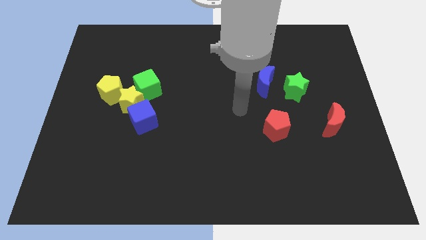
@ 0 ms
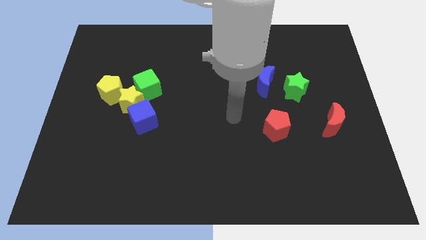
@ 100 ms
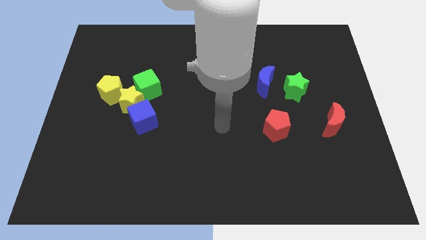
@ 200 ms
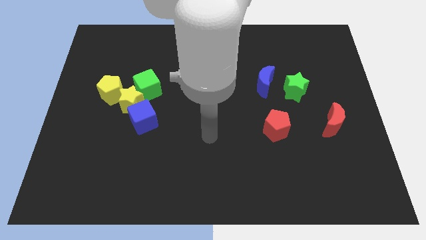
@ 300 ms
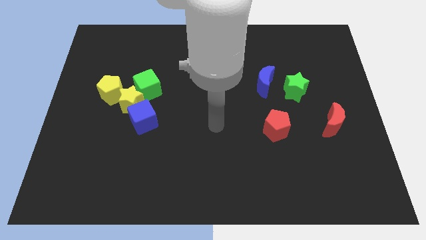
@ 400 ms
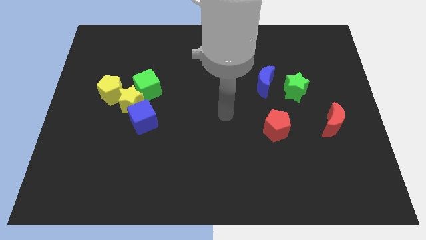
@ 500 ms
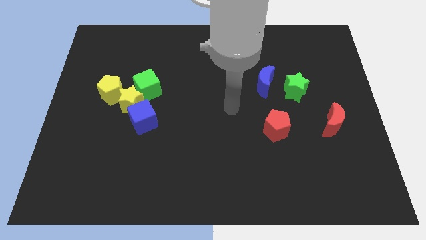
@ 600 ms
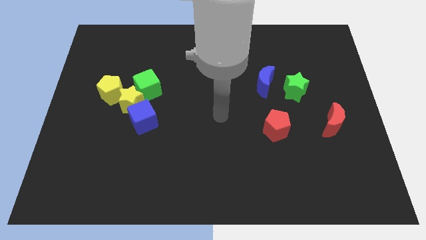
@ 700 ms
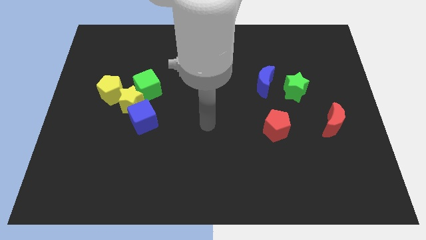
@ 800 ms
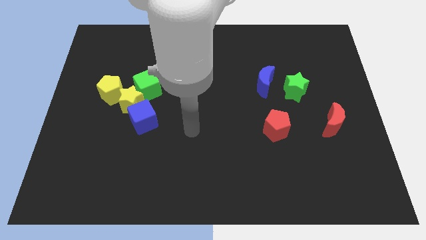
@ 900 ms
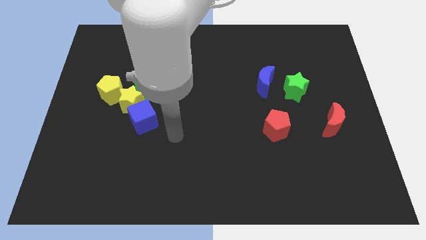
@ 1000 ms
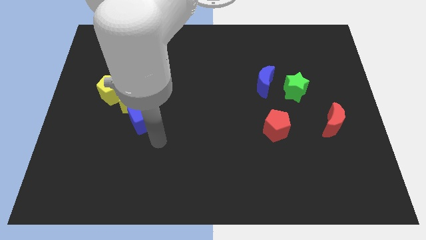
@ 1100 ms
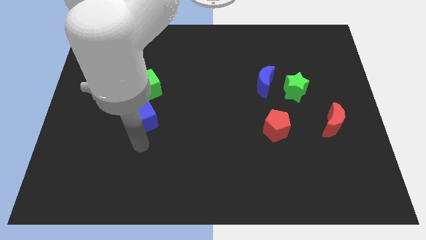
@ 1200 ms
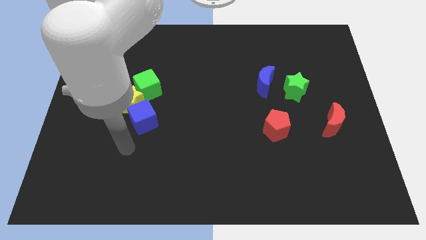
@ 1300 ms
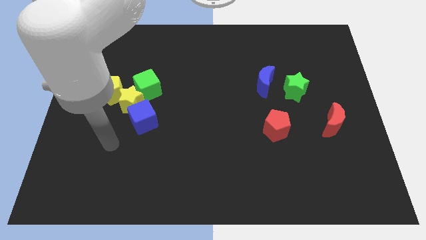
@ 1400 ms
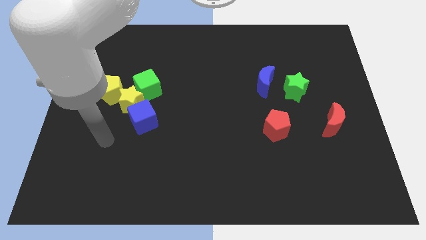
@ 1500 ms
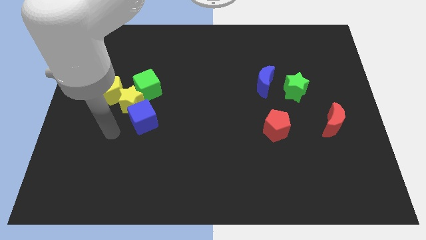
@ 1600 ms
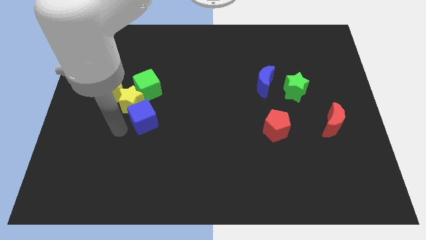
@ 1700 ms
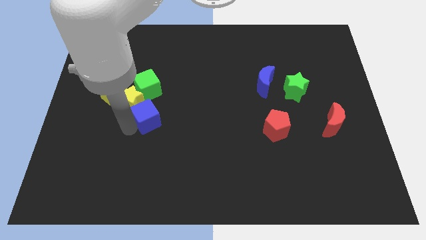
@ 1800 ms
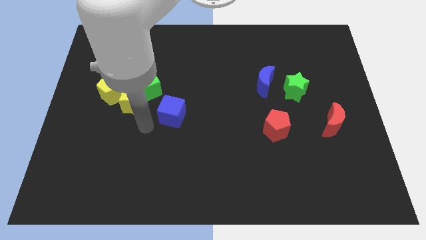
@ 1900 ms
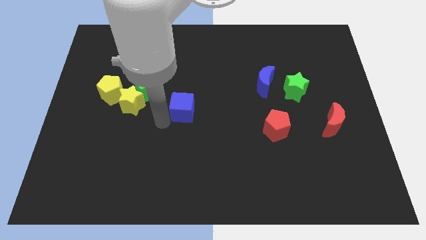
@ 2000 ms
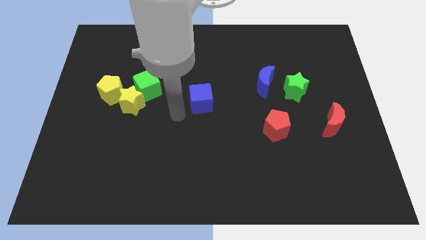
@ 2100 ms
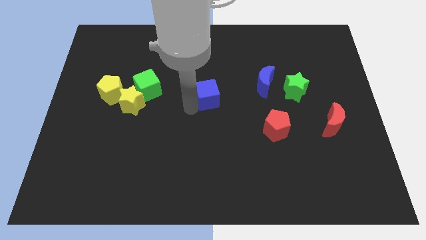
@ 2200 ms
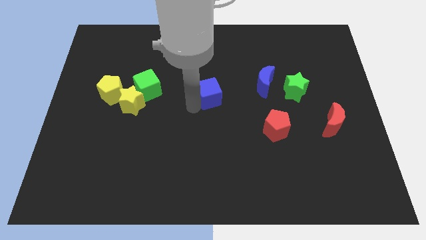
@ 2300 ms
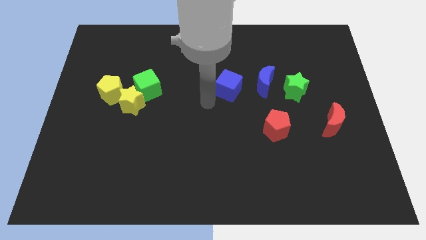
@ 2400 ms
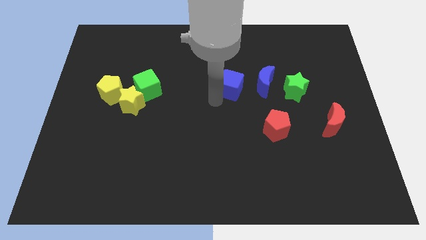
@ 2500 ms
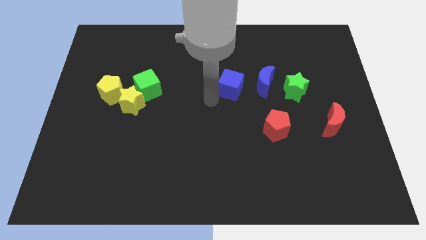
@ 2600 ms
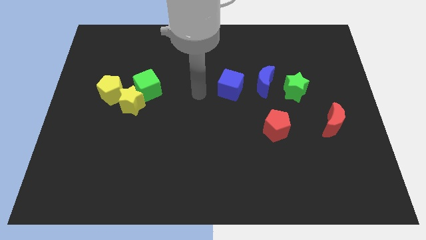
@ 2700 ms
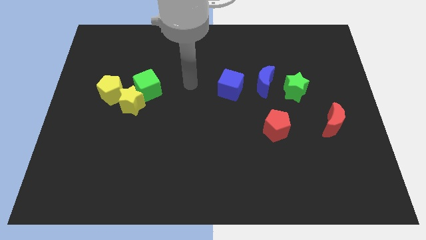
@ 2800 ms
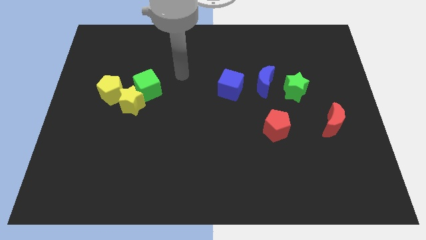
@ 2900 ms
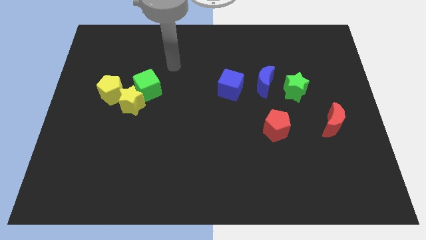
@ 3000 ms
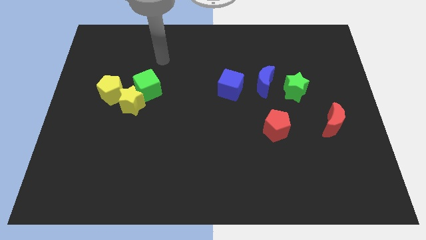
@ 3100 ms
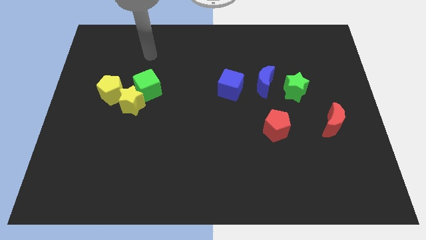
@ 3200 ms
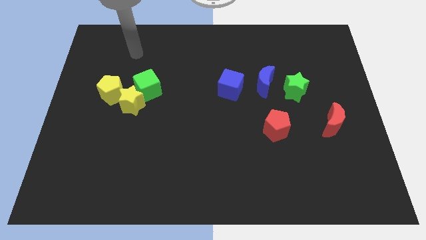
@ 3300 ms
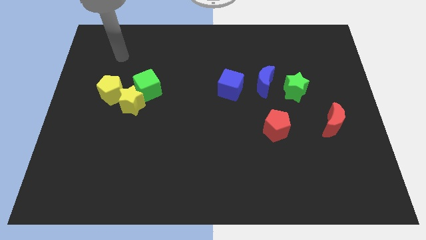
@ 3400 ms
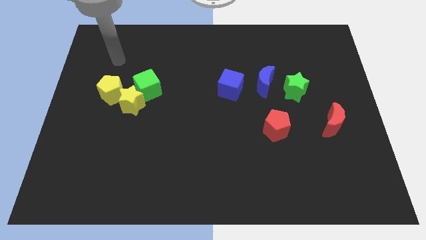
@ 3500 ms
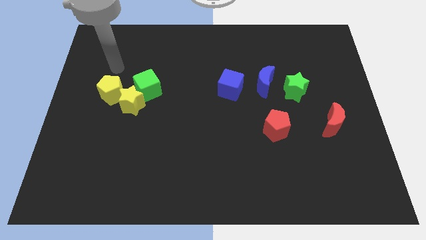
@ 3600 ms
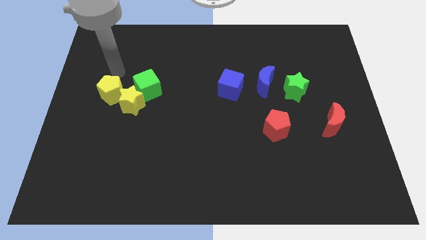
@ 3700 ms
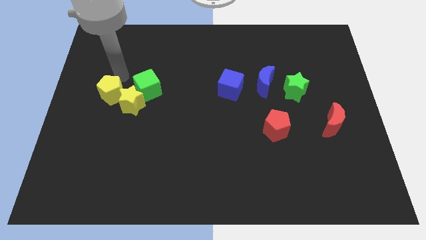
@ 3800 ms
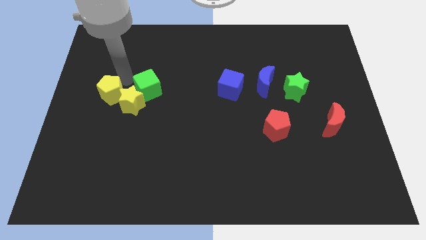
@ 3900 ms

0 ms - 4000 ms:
place the arm in between the green cube and yellow pentagon

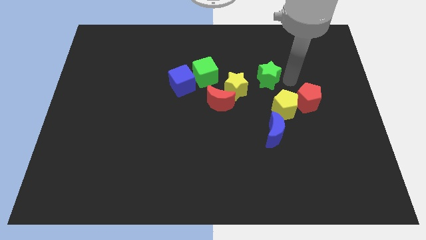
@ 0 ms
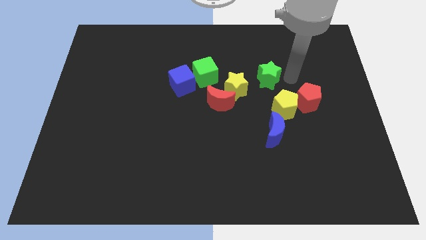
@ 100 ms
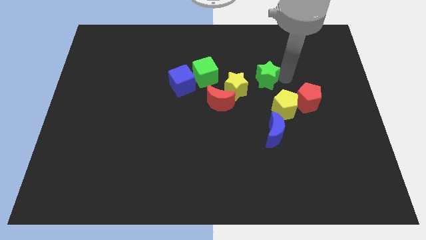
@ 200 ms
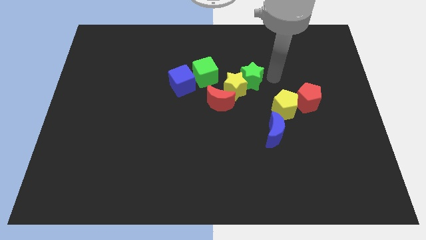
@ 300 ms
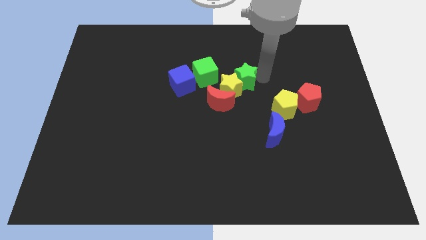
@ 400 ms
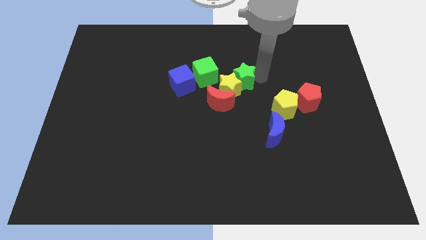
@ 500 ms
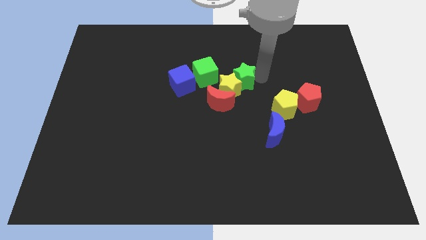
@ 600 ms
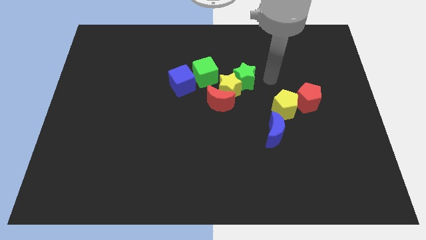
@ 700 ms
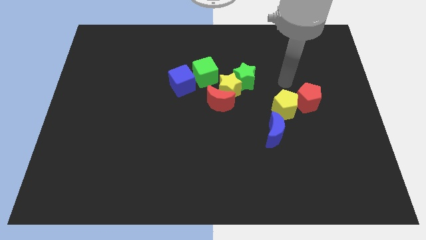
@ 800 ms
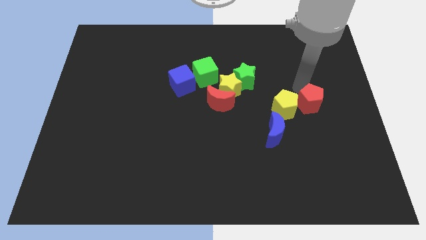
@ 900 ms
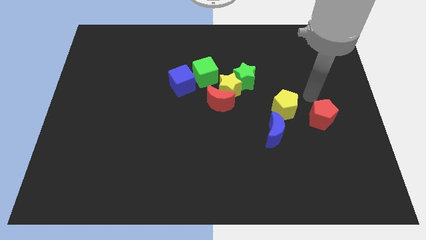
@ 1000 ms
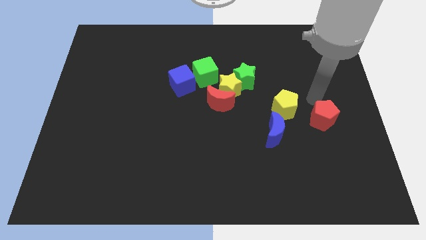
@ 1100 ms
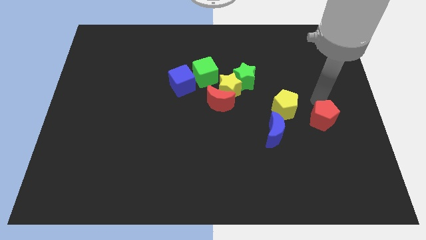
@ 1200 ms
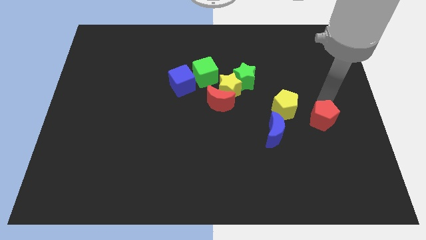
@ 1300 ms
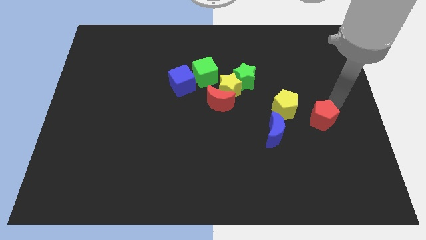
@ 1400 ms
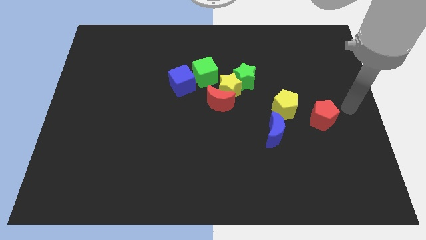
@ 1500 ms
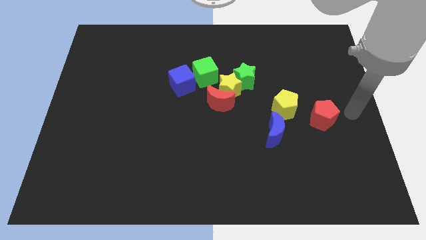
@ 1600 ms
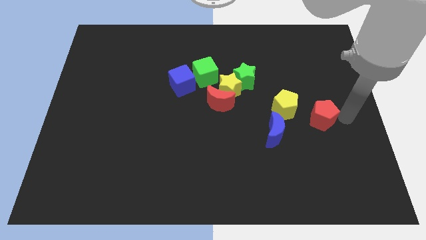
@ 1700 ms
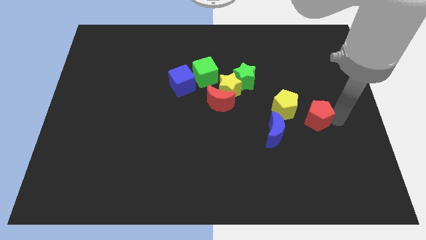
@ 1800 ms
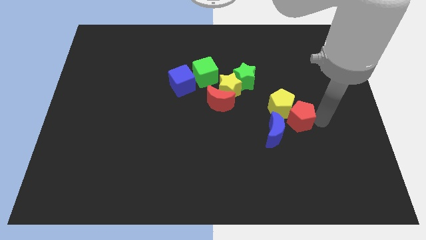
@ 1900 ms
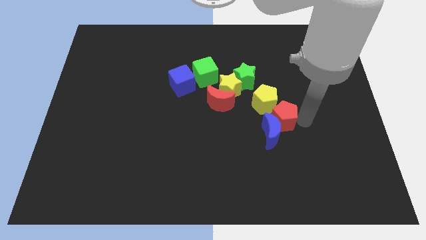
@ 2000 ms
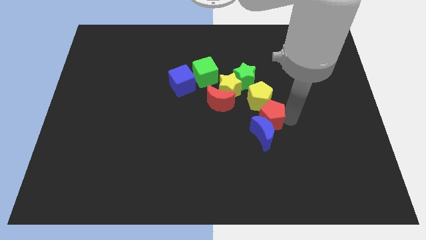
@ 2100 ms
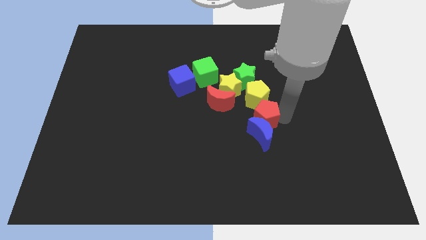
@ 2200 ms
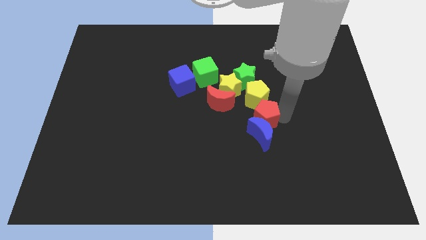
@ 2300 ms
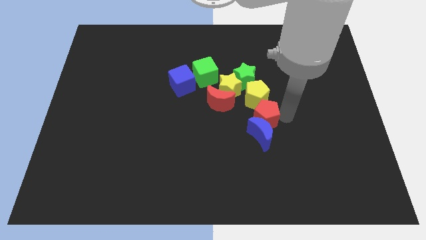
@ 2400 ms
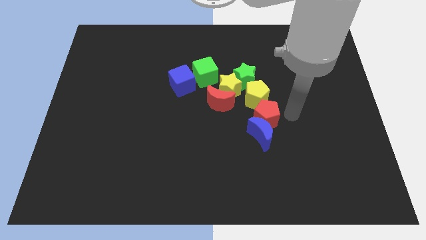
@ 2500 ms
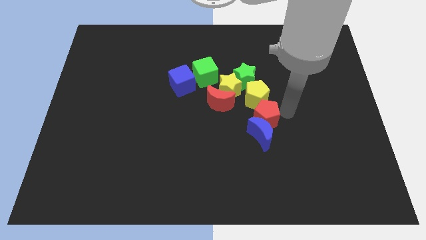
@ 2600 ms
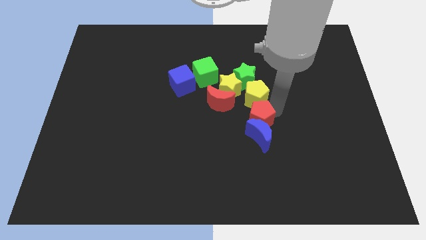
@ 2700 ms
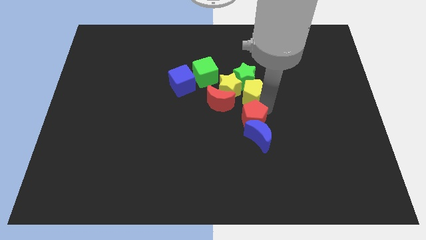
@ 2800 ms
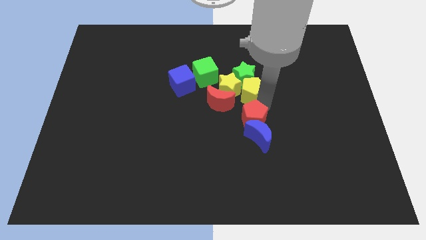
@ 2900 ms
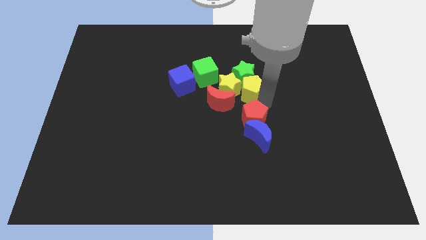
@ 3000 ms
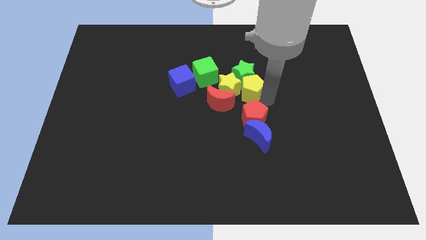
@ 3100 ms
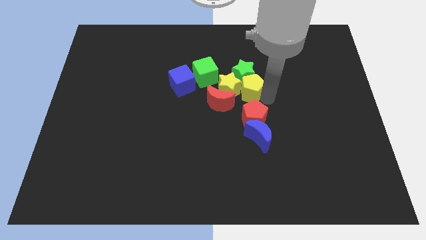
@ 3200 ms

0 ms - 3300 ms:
push the green star with the yellow pentagon towards the top center of the board

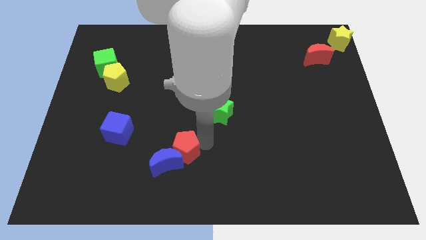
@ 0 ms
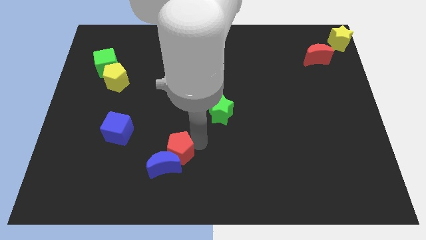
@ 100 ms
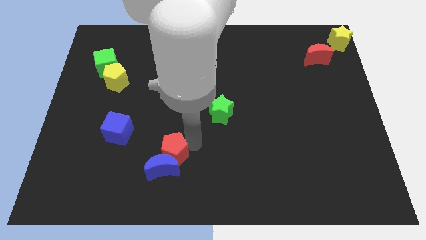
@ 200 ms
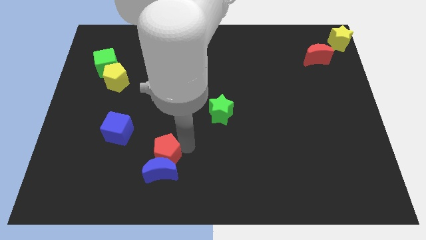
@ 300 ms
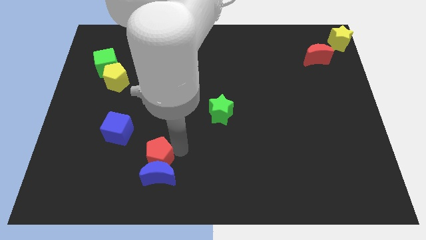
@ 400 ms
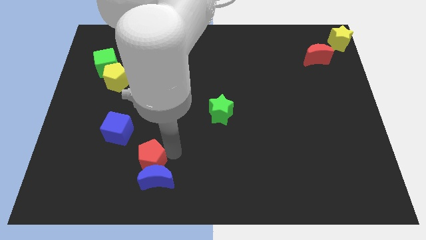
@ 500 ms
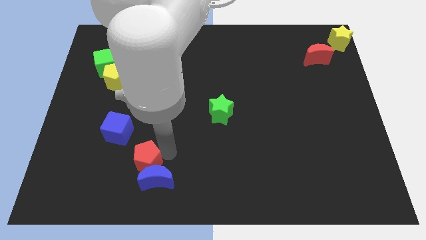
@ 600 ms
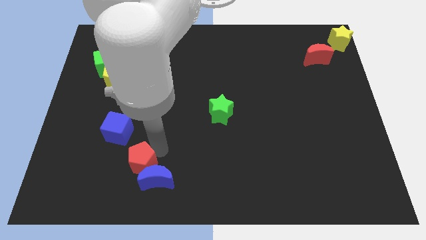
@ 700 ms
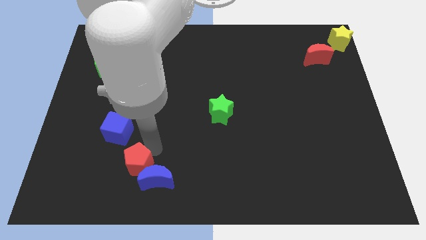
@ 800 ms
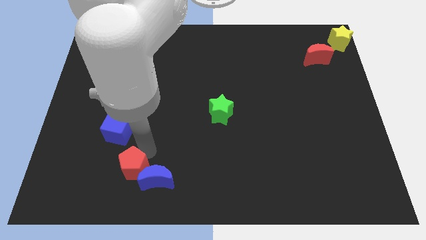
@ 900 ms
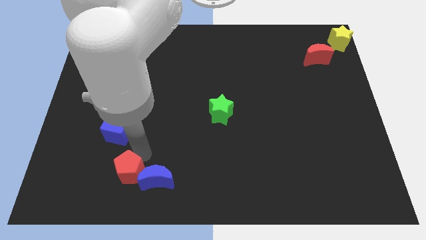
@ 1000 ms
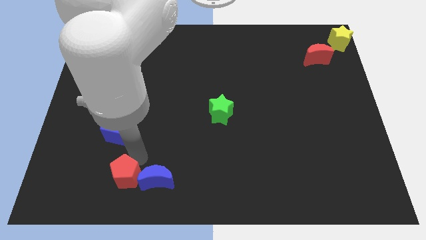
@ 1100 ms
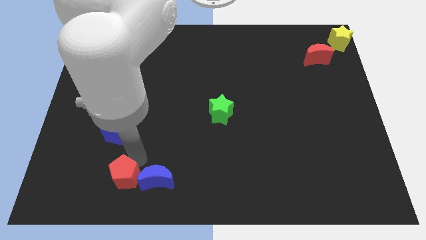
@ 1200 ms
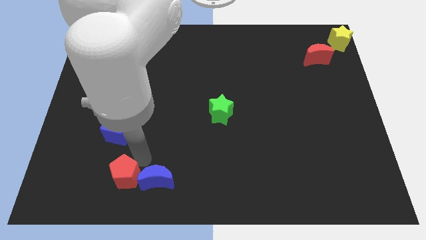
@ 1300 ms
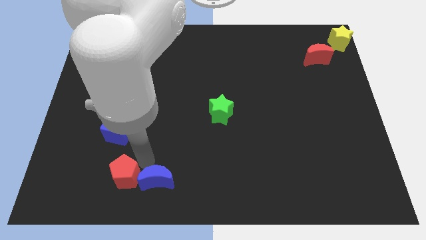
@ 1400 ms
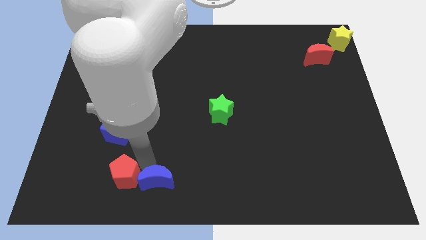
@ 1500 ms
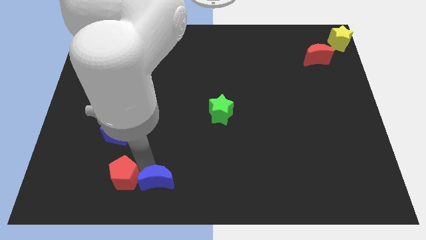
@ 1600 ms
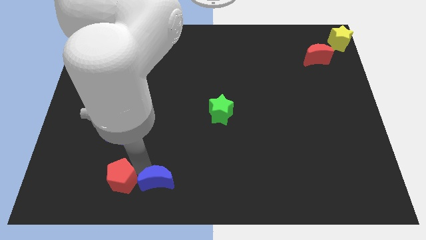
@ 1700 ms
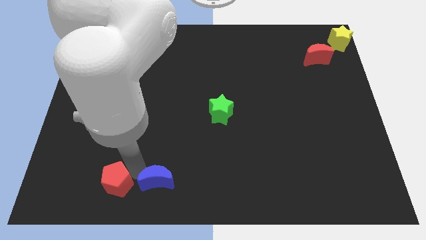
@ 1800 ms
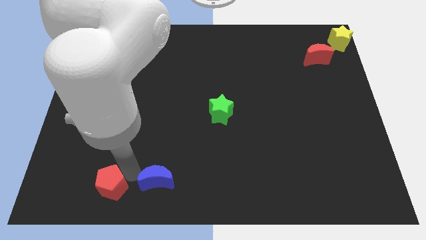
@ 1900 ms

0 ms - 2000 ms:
put the red pentagon left to the blue moon
